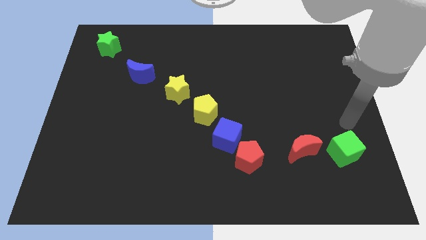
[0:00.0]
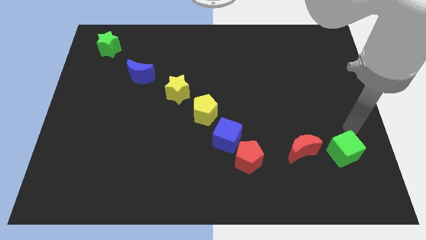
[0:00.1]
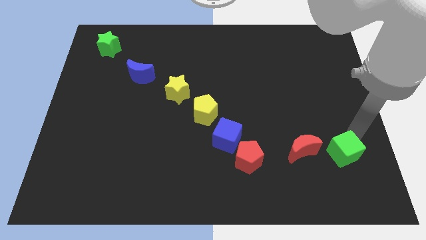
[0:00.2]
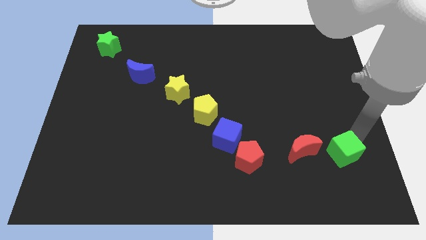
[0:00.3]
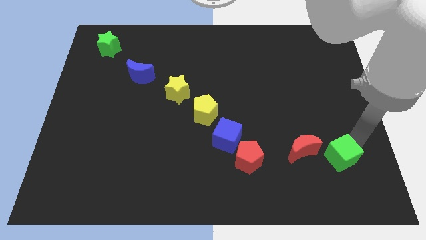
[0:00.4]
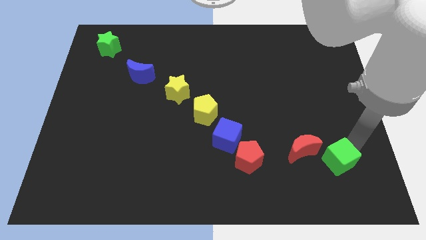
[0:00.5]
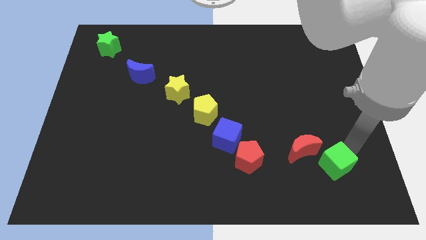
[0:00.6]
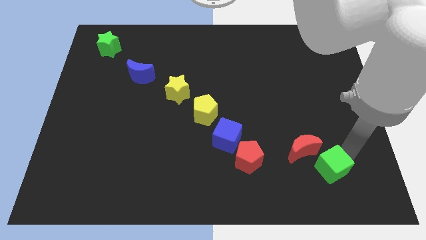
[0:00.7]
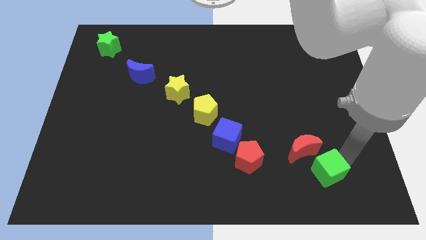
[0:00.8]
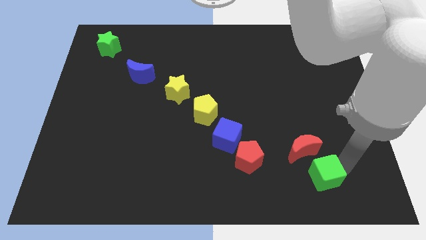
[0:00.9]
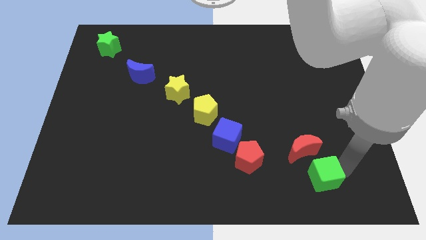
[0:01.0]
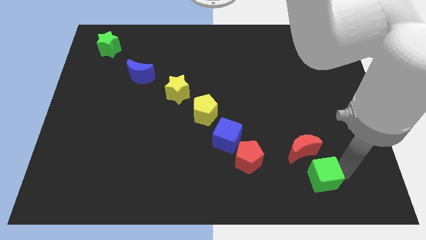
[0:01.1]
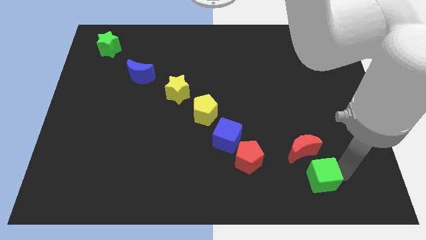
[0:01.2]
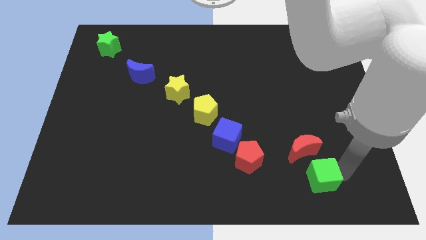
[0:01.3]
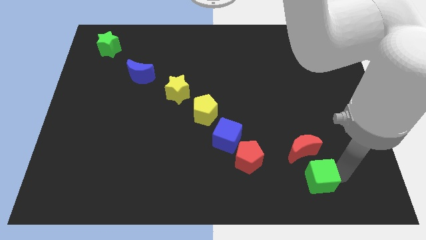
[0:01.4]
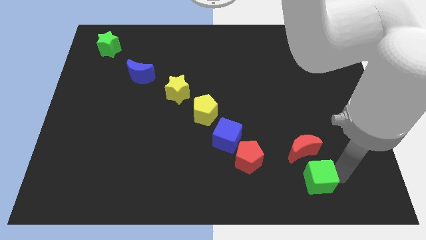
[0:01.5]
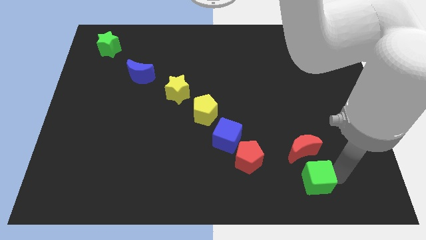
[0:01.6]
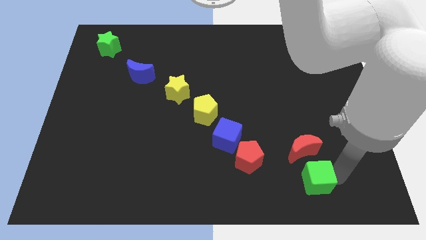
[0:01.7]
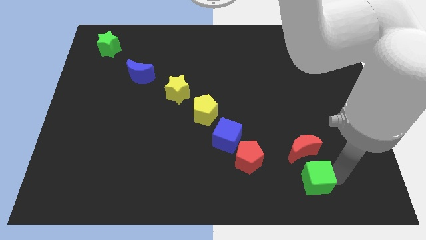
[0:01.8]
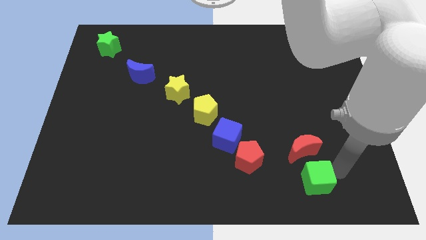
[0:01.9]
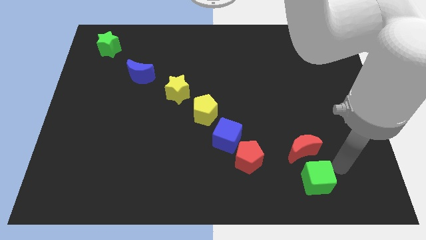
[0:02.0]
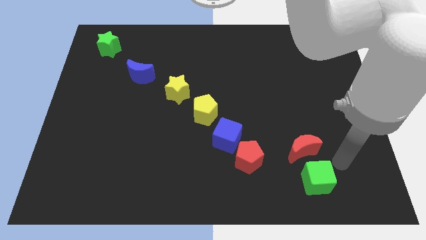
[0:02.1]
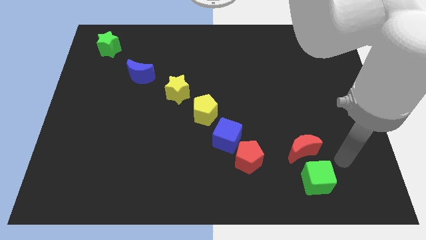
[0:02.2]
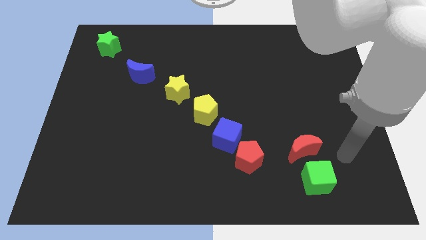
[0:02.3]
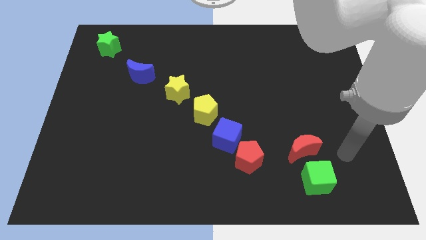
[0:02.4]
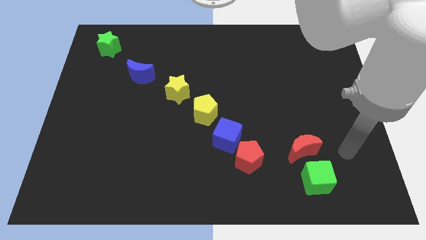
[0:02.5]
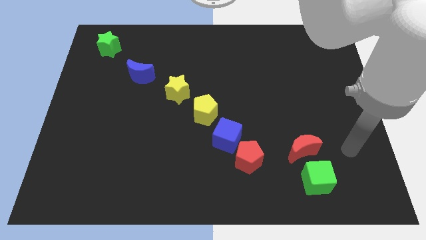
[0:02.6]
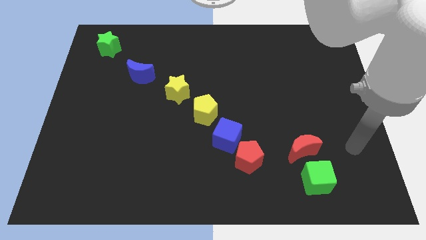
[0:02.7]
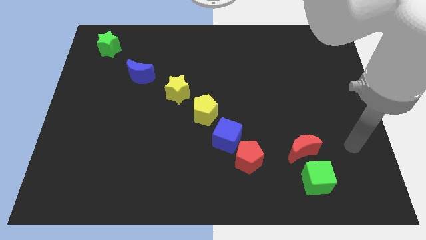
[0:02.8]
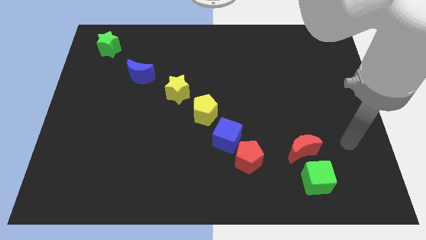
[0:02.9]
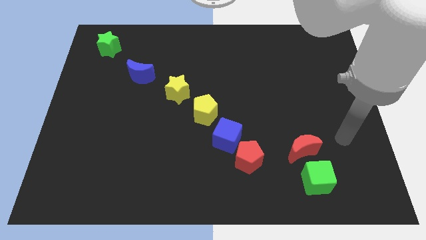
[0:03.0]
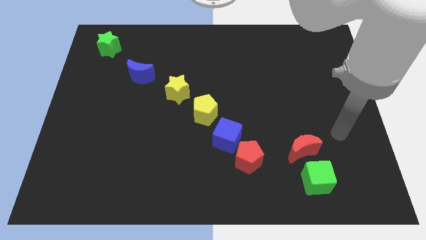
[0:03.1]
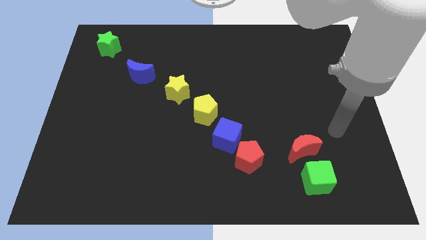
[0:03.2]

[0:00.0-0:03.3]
move the green cube diagonally bottom right to red pentagon

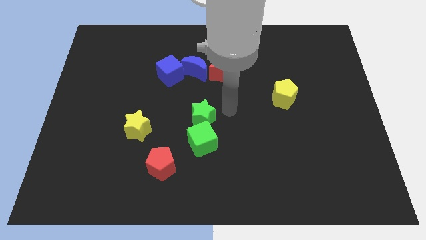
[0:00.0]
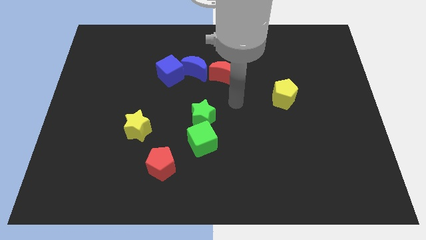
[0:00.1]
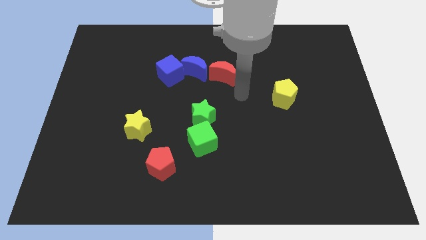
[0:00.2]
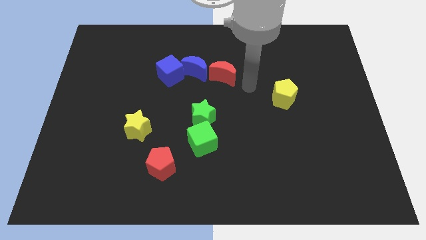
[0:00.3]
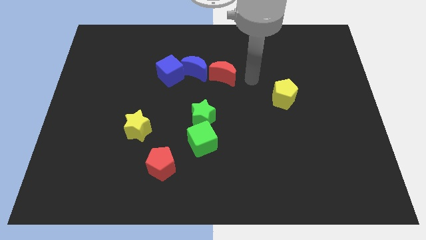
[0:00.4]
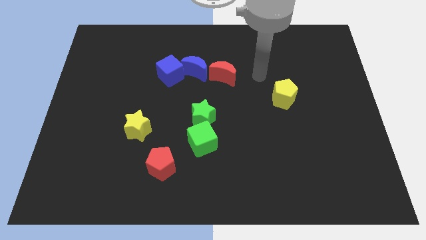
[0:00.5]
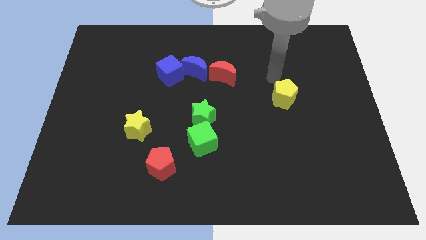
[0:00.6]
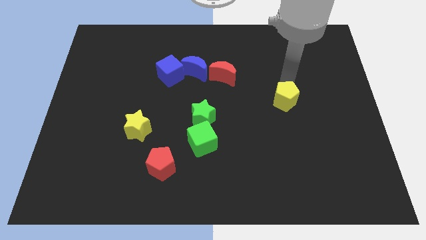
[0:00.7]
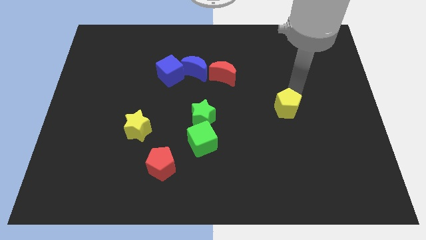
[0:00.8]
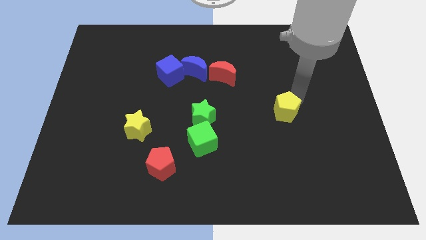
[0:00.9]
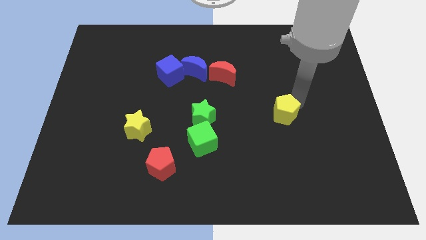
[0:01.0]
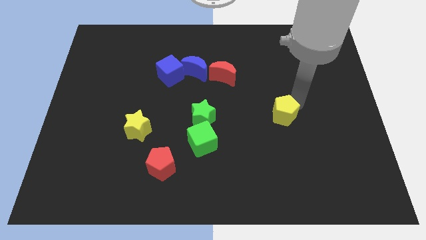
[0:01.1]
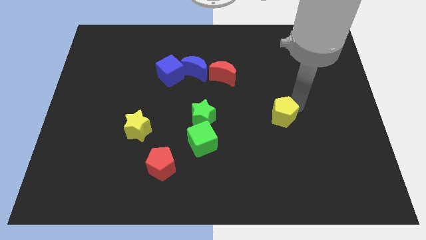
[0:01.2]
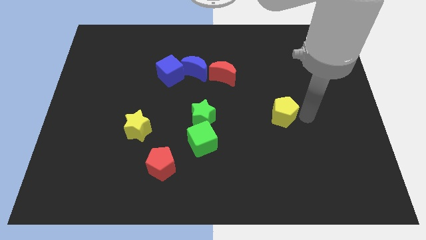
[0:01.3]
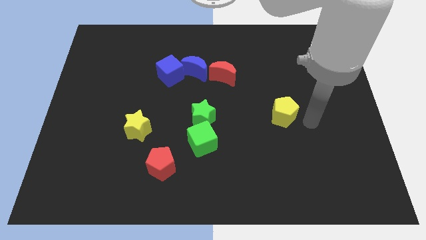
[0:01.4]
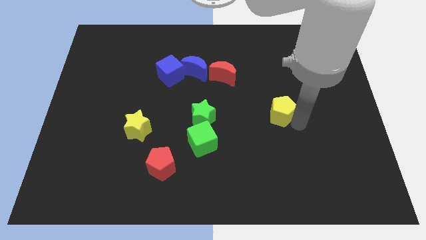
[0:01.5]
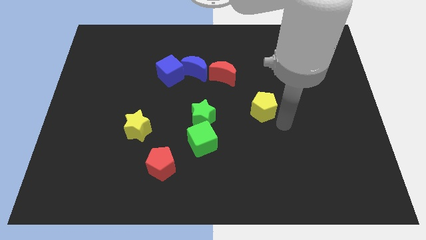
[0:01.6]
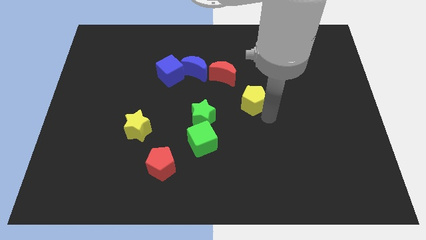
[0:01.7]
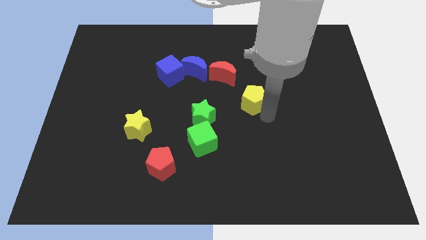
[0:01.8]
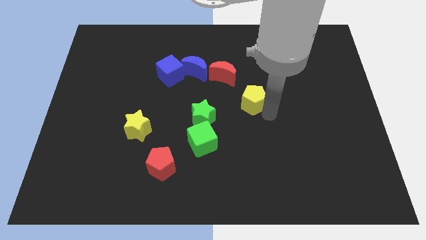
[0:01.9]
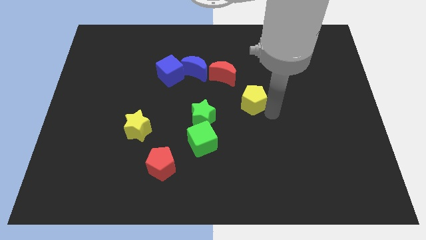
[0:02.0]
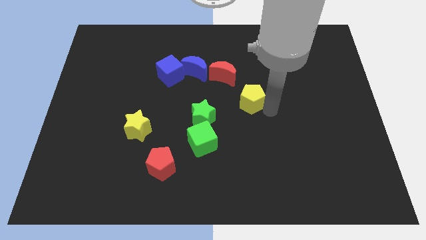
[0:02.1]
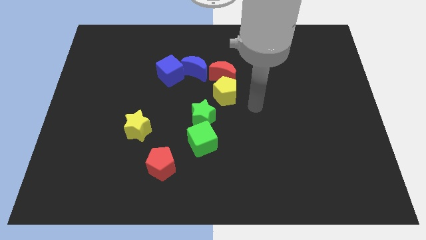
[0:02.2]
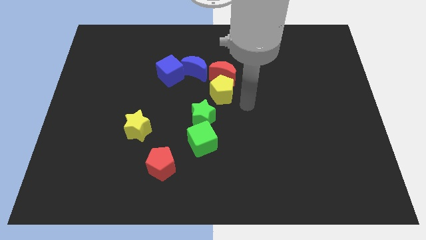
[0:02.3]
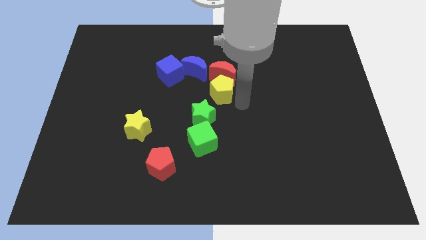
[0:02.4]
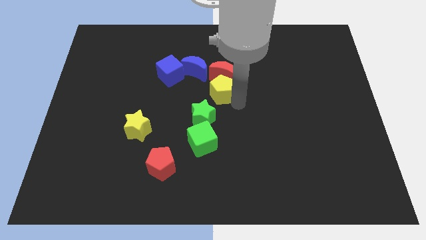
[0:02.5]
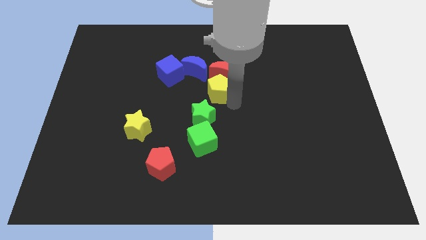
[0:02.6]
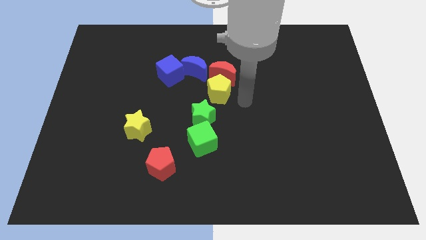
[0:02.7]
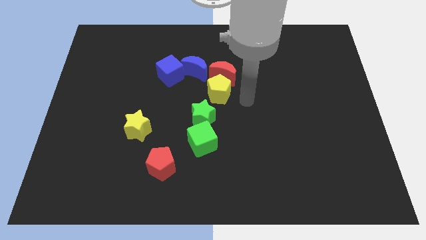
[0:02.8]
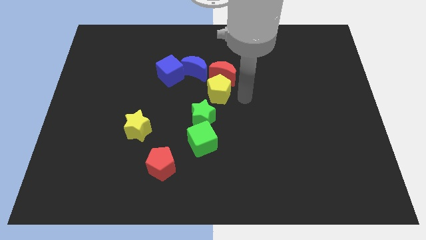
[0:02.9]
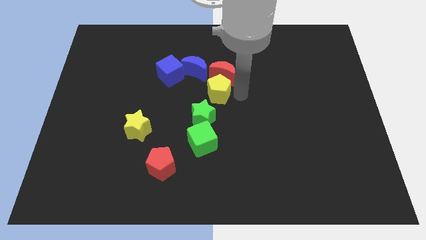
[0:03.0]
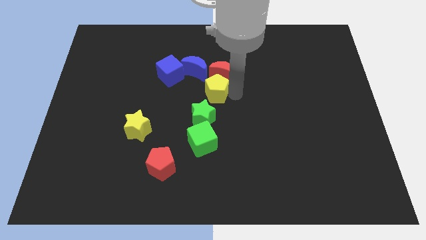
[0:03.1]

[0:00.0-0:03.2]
place the yellow pentagon at the bottom of red moon

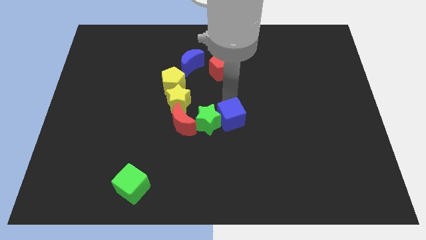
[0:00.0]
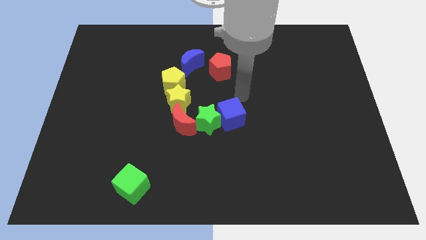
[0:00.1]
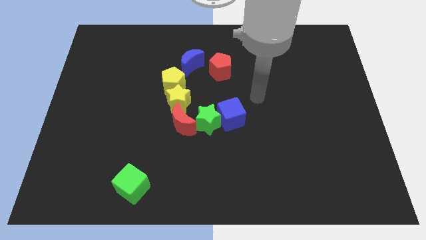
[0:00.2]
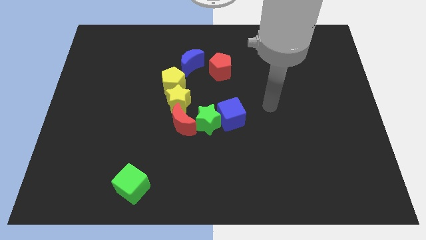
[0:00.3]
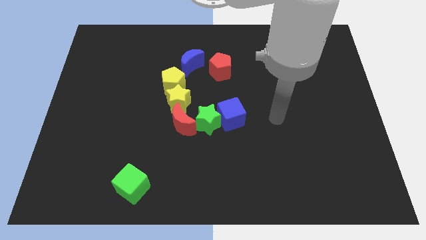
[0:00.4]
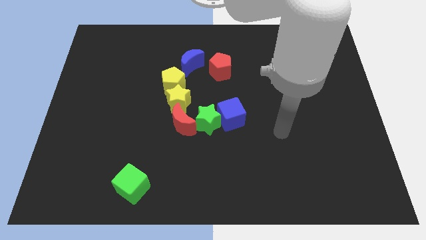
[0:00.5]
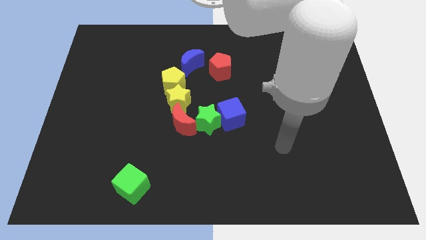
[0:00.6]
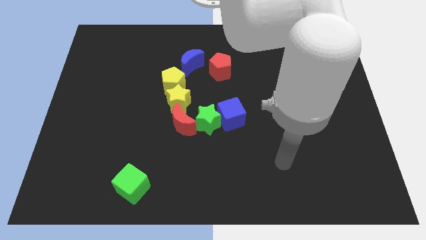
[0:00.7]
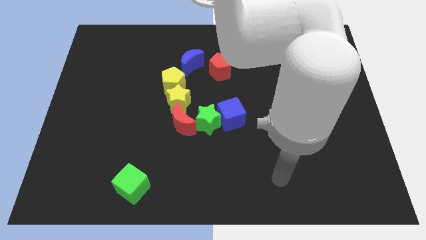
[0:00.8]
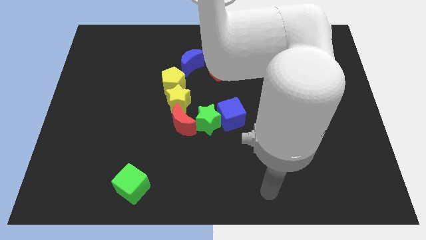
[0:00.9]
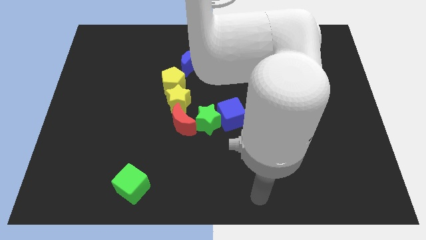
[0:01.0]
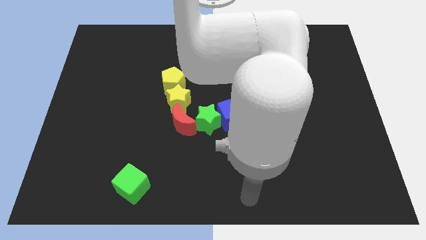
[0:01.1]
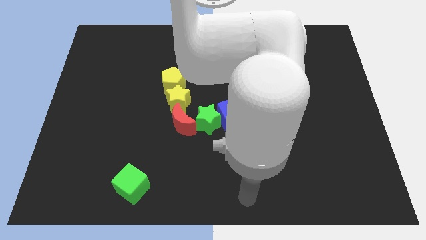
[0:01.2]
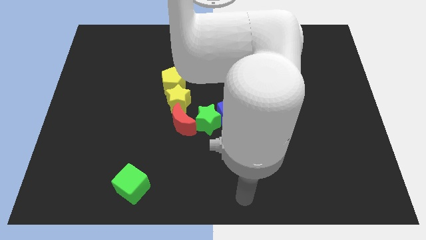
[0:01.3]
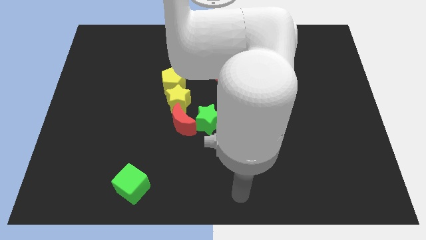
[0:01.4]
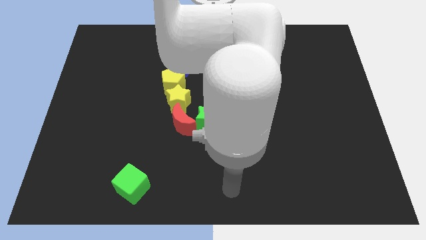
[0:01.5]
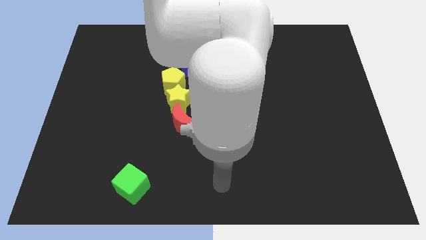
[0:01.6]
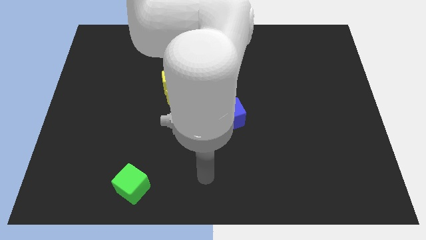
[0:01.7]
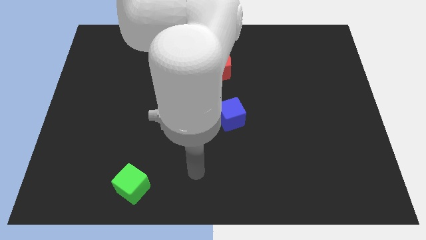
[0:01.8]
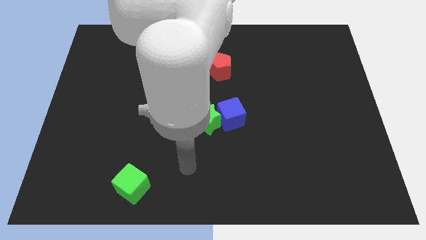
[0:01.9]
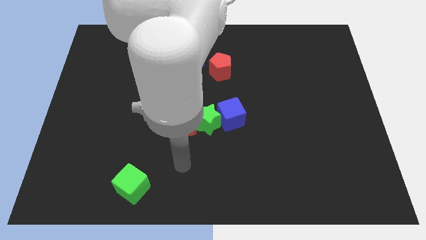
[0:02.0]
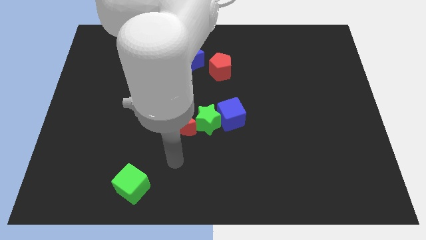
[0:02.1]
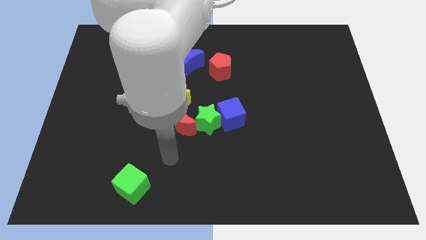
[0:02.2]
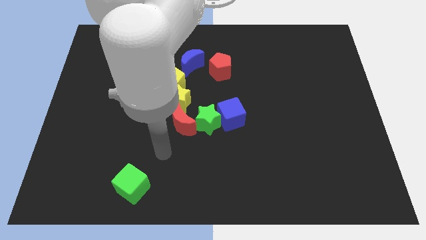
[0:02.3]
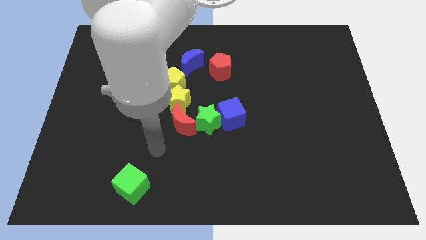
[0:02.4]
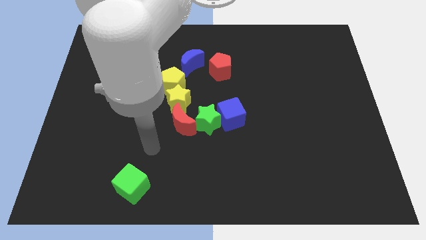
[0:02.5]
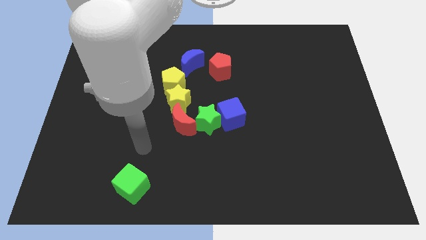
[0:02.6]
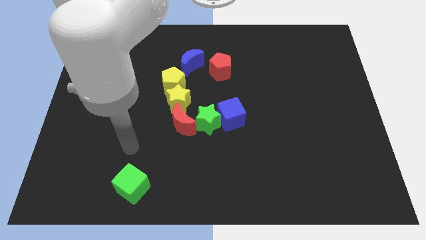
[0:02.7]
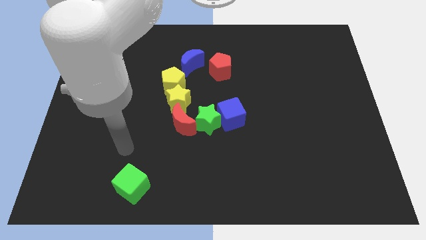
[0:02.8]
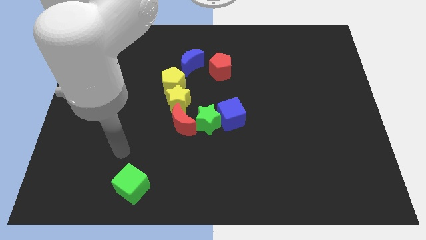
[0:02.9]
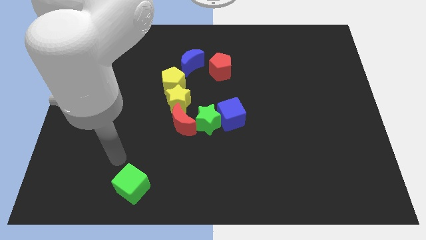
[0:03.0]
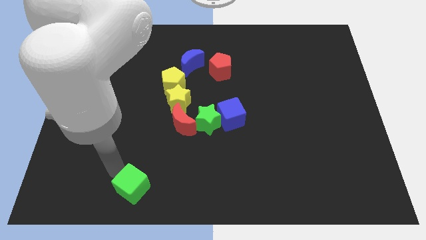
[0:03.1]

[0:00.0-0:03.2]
slide your arm to the top of green cube
